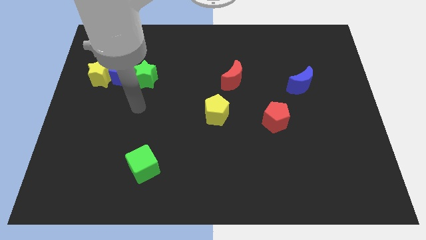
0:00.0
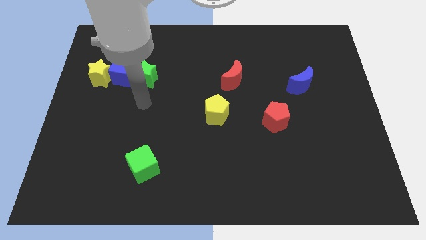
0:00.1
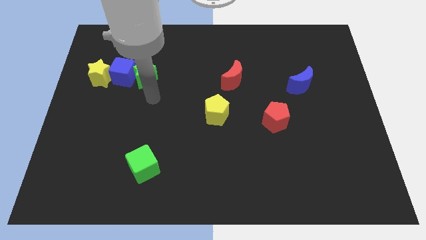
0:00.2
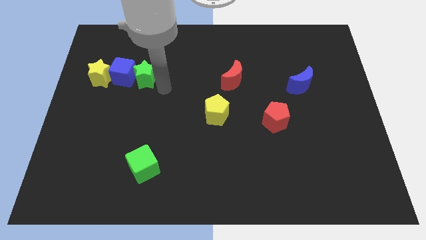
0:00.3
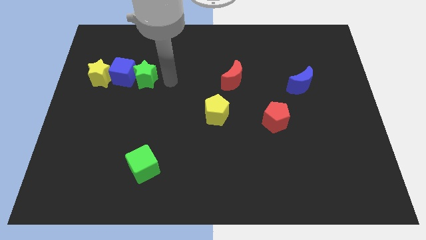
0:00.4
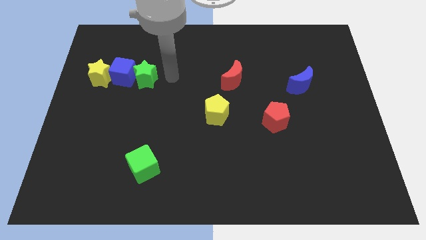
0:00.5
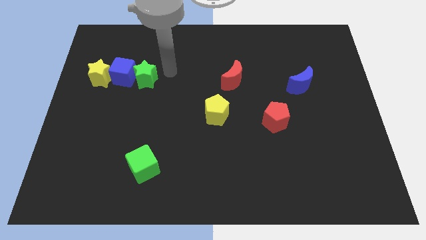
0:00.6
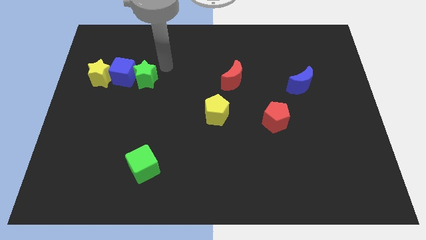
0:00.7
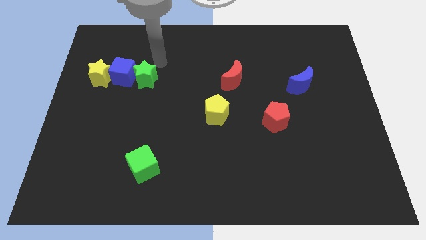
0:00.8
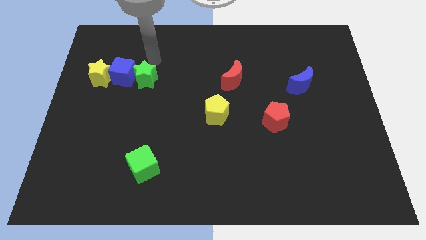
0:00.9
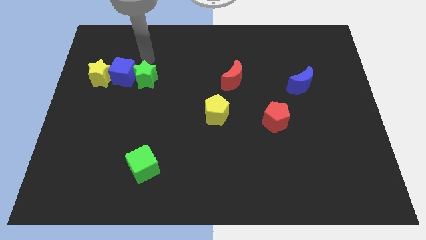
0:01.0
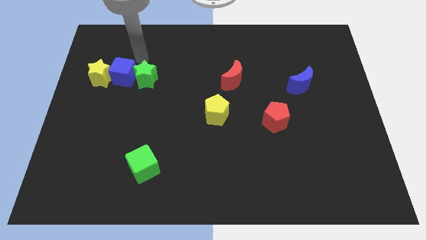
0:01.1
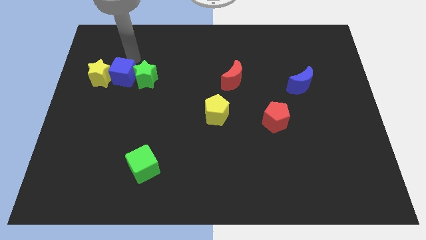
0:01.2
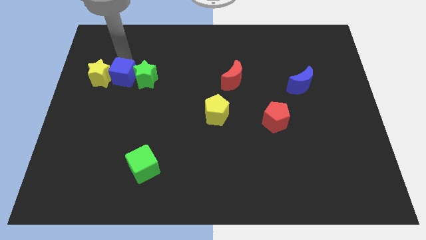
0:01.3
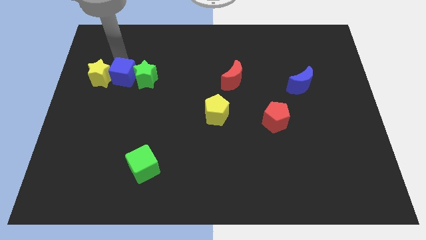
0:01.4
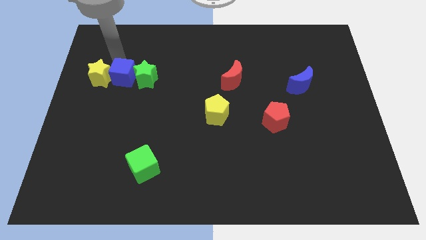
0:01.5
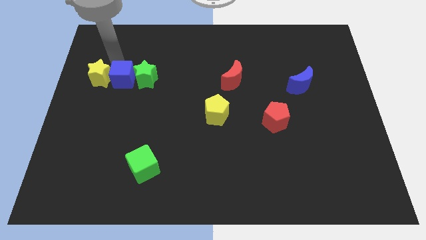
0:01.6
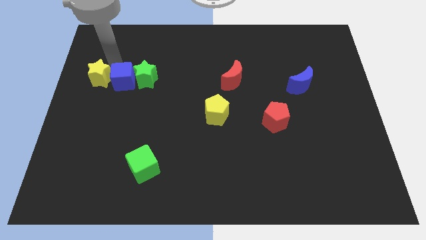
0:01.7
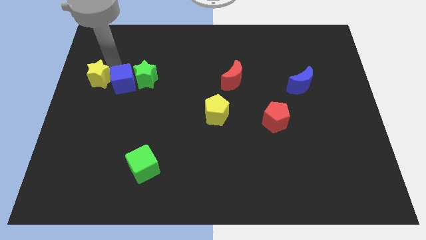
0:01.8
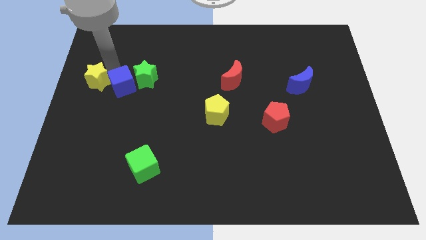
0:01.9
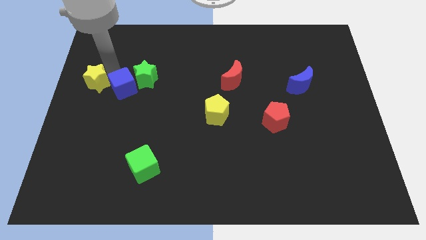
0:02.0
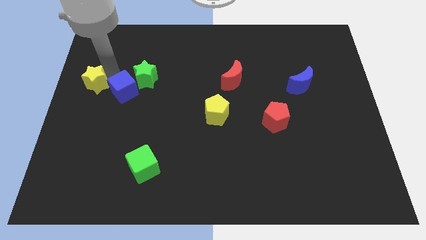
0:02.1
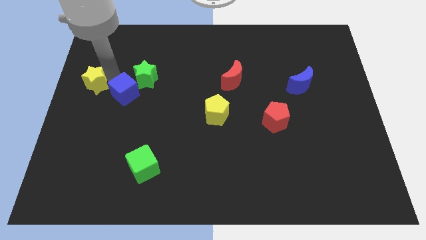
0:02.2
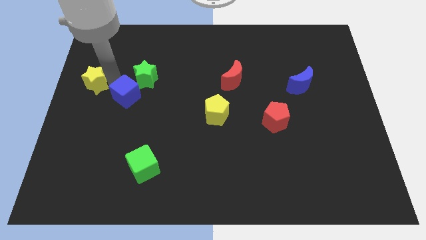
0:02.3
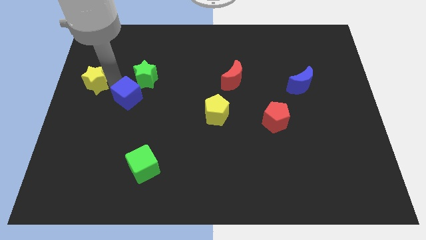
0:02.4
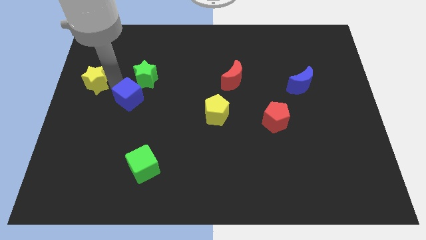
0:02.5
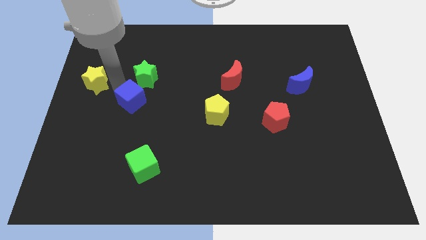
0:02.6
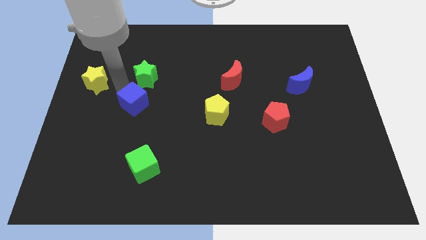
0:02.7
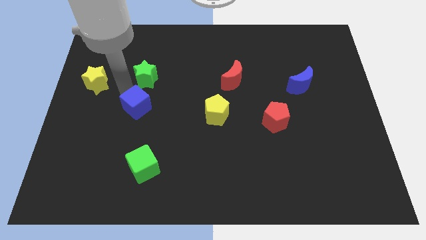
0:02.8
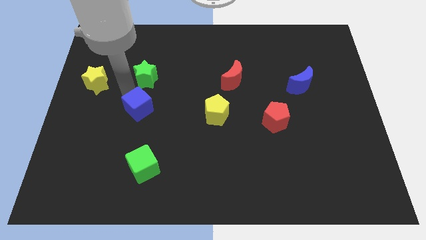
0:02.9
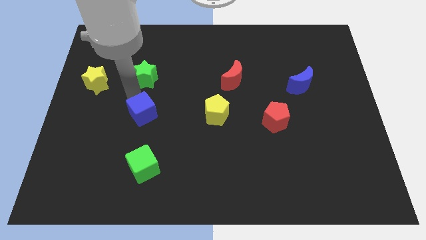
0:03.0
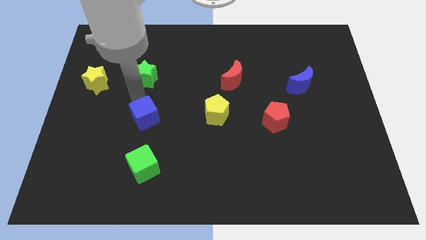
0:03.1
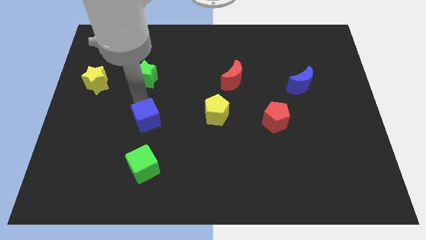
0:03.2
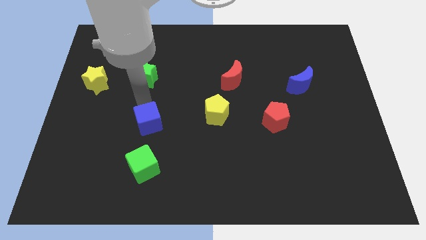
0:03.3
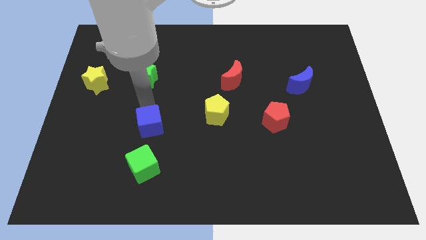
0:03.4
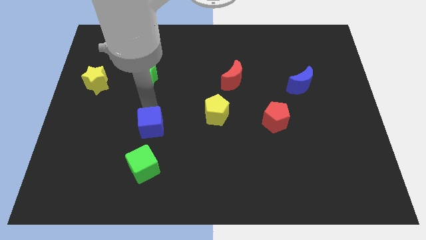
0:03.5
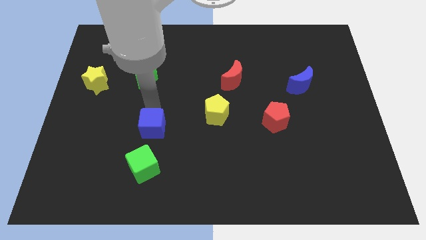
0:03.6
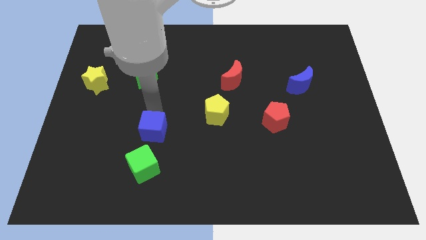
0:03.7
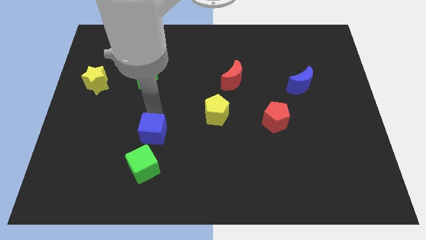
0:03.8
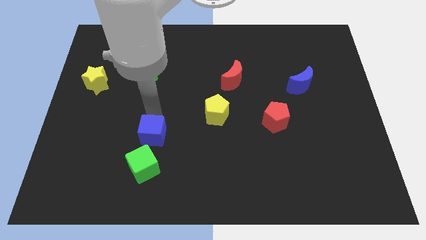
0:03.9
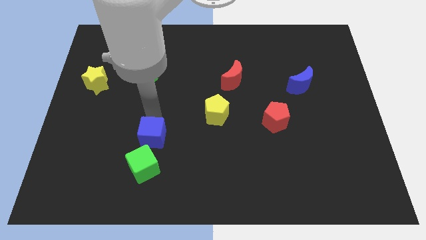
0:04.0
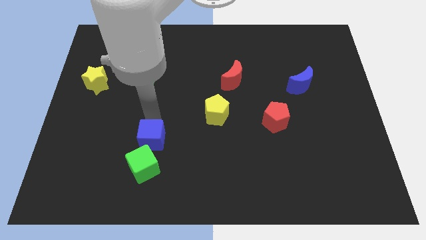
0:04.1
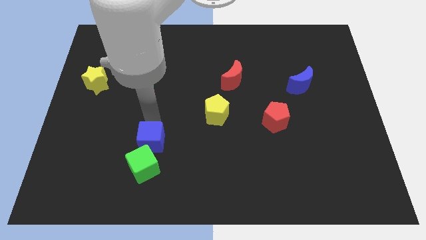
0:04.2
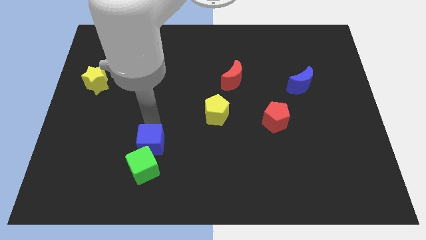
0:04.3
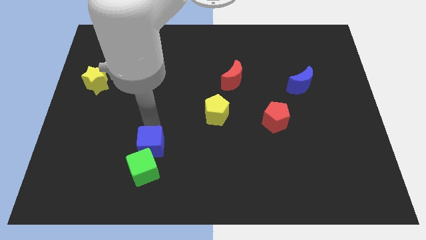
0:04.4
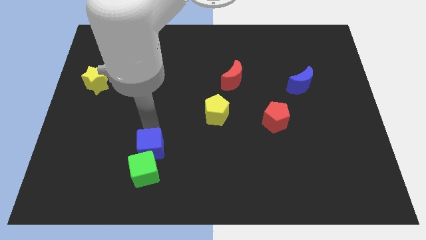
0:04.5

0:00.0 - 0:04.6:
push the blue cube to the green cube

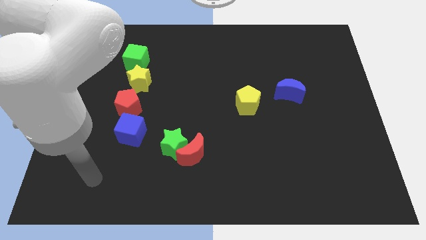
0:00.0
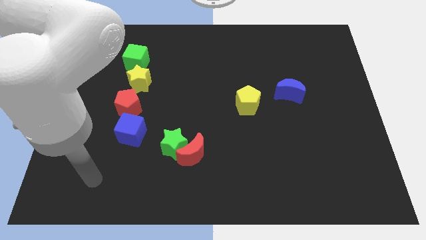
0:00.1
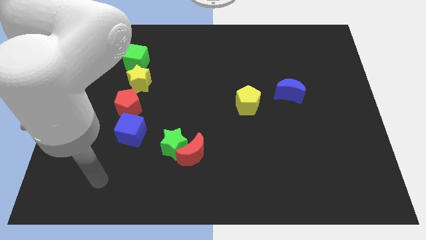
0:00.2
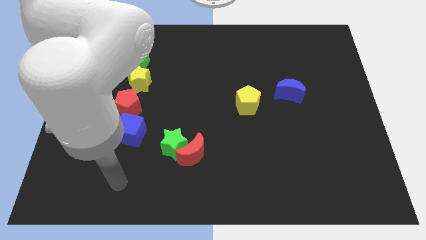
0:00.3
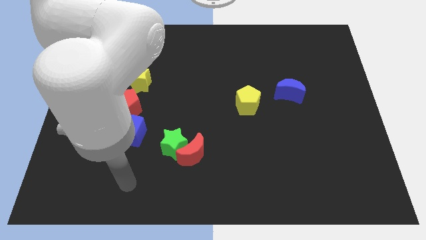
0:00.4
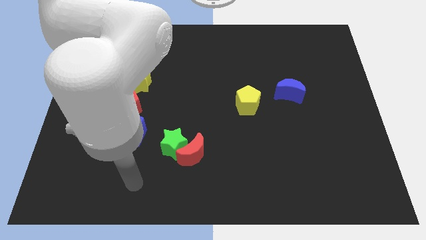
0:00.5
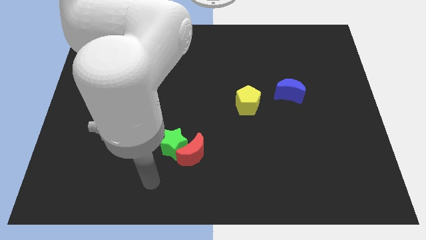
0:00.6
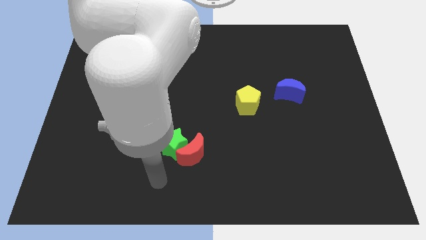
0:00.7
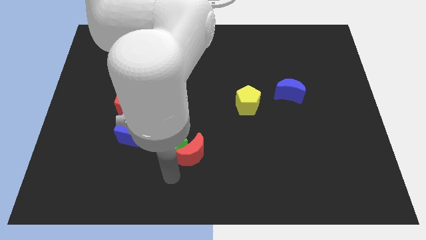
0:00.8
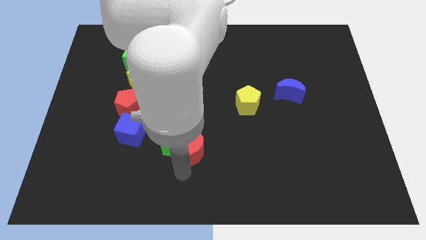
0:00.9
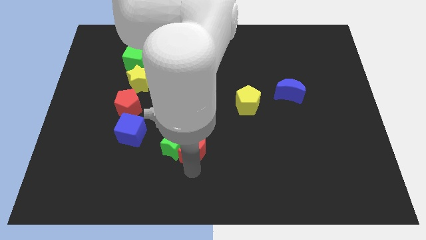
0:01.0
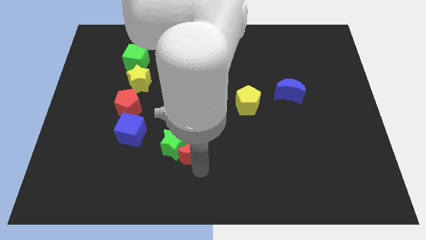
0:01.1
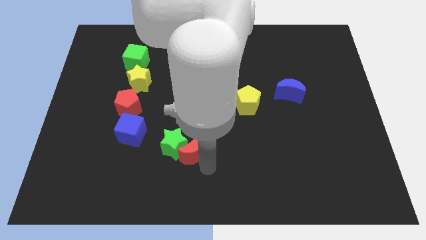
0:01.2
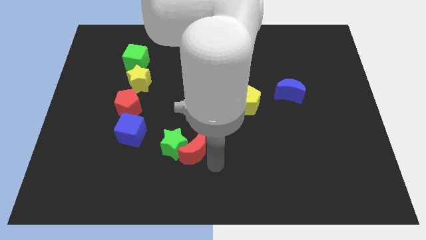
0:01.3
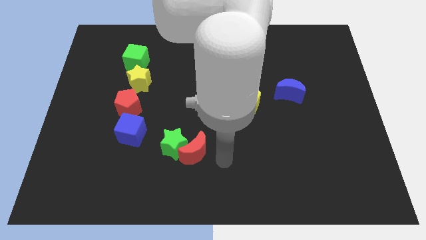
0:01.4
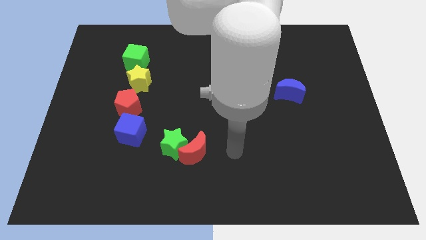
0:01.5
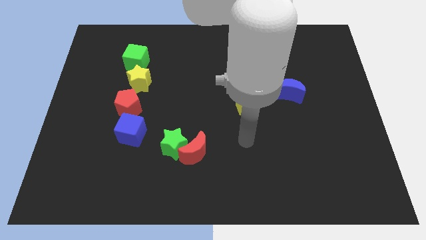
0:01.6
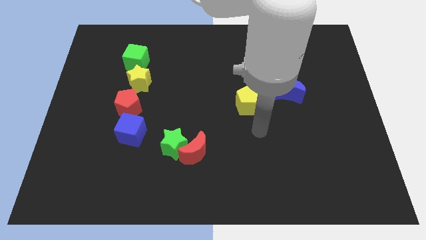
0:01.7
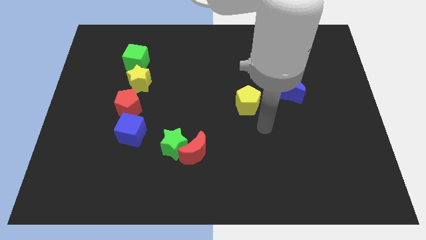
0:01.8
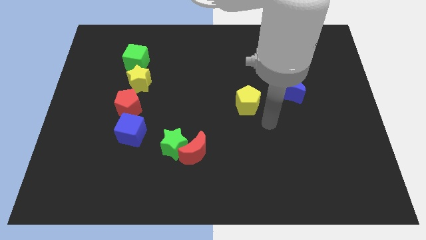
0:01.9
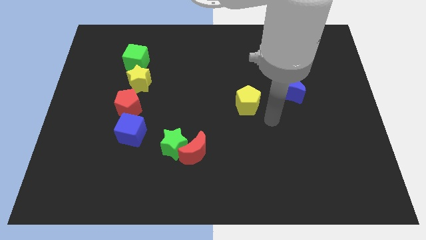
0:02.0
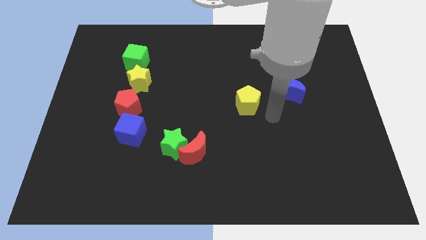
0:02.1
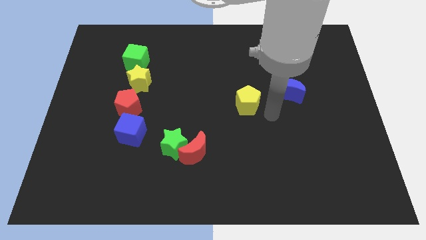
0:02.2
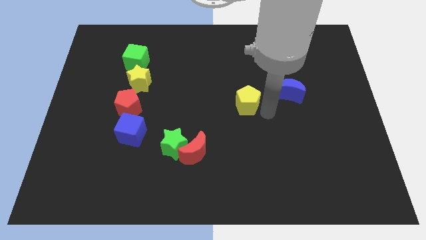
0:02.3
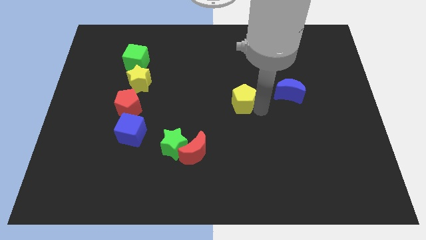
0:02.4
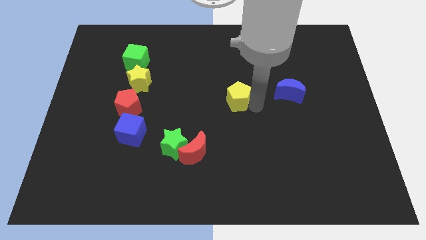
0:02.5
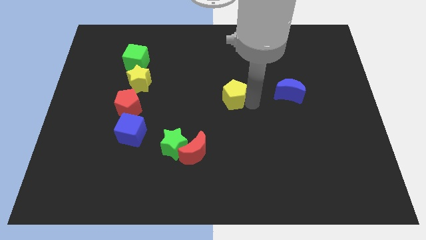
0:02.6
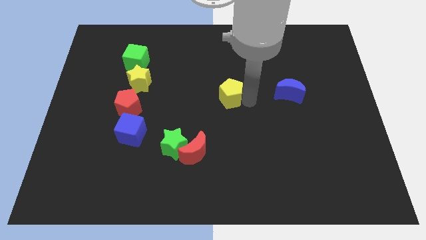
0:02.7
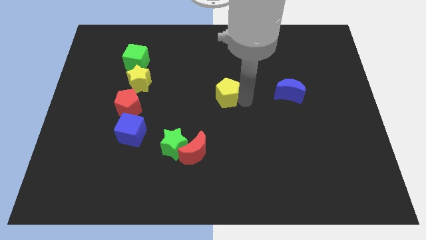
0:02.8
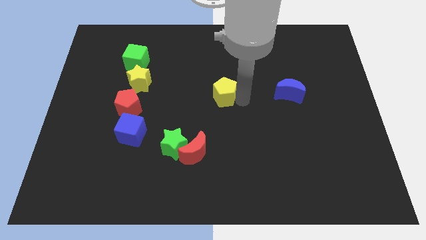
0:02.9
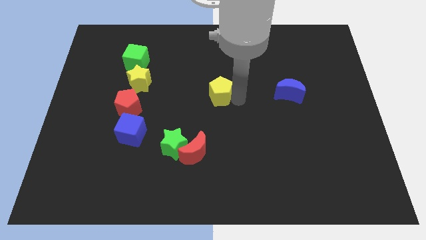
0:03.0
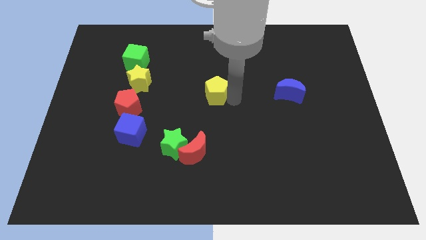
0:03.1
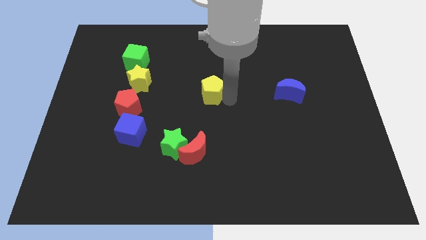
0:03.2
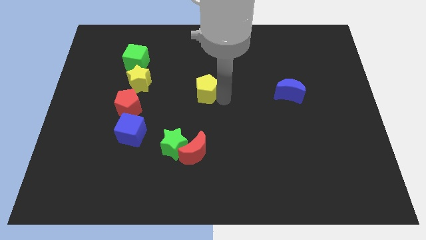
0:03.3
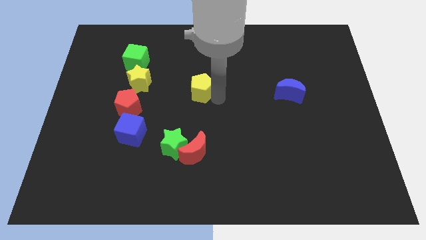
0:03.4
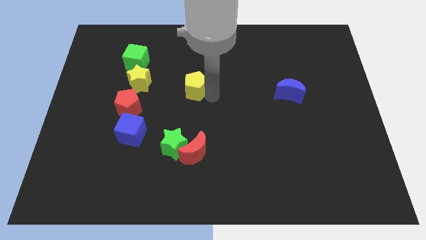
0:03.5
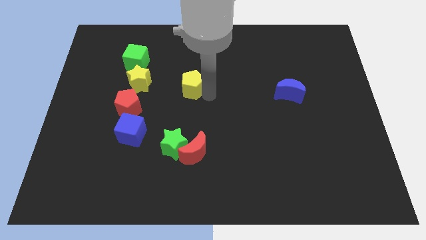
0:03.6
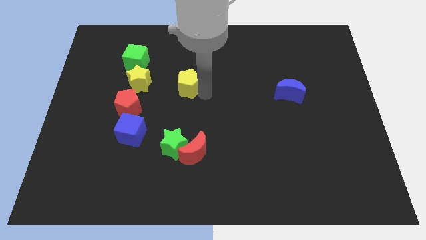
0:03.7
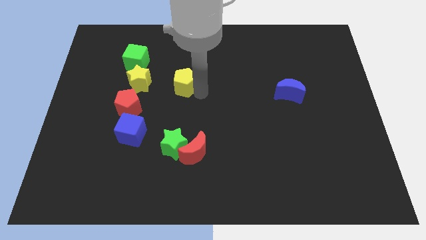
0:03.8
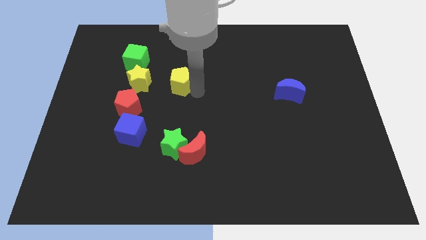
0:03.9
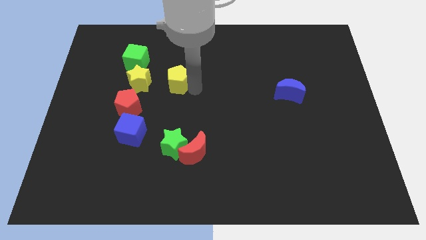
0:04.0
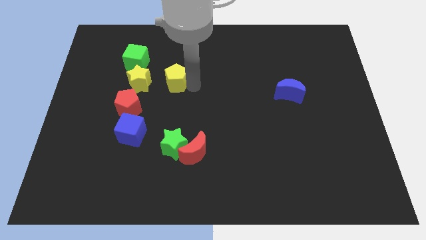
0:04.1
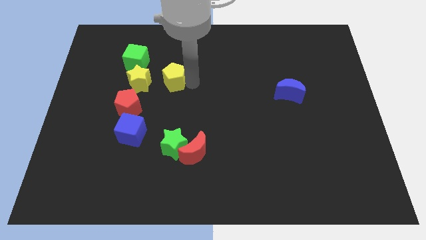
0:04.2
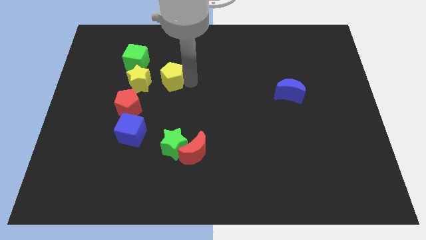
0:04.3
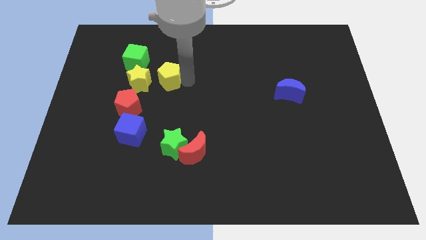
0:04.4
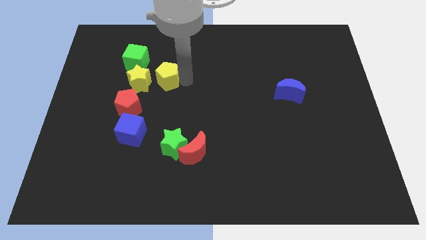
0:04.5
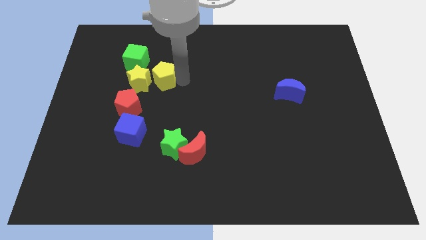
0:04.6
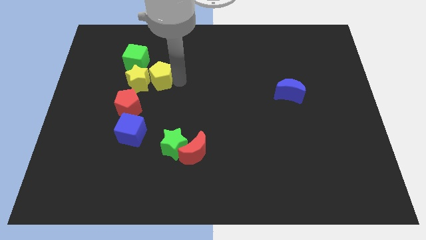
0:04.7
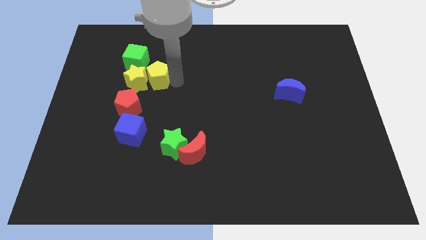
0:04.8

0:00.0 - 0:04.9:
slide the yellow pentagon towards the yellow star
